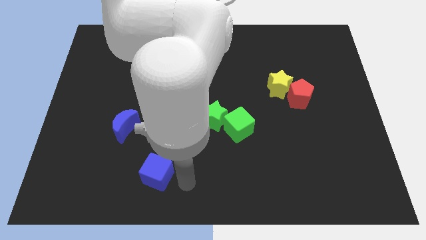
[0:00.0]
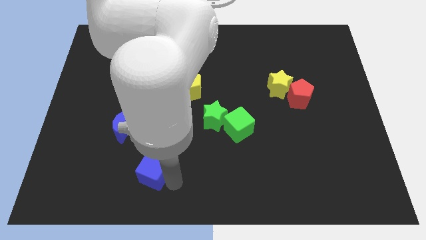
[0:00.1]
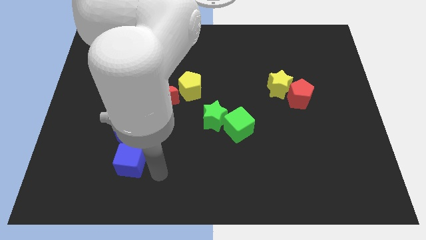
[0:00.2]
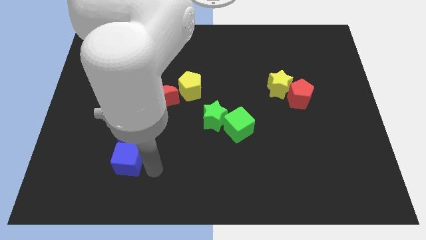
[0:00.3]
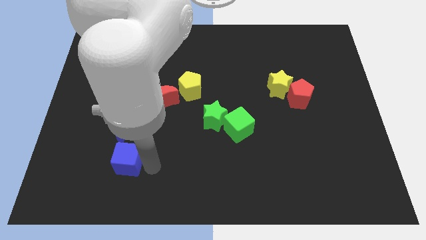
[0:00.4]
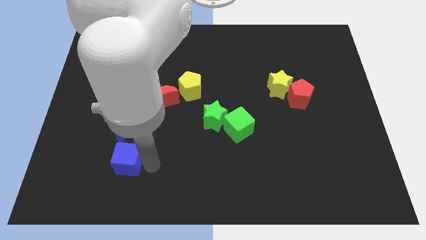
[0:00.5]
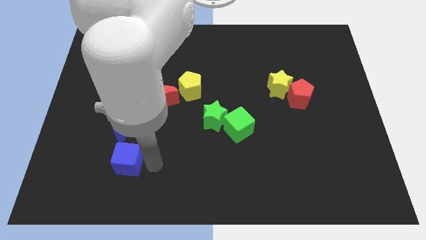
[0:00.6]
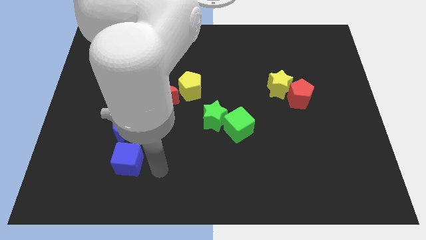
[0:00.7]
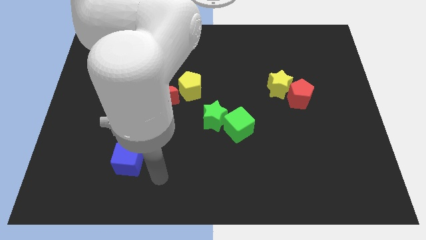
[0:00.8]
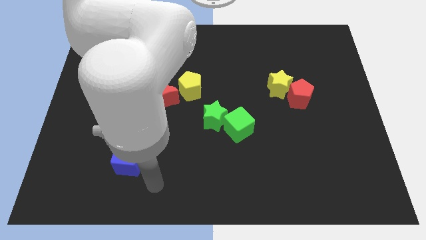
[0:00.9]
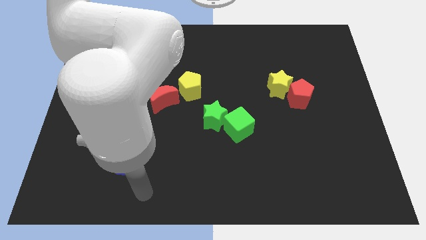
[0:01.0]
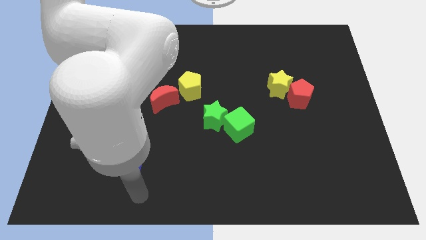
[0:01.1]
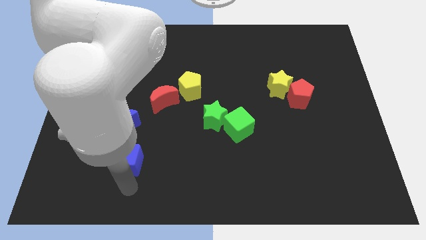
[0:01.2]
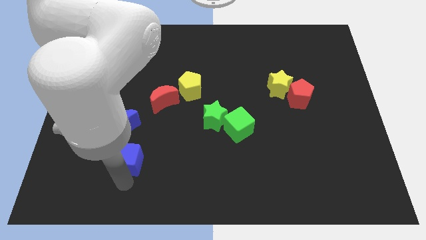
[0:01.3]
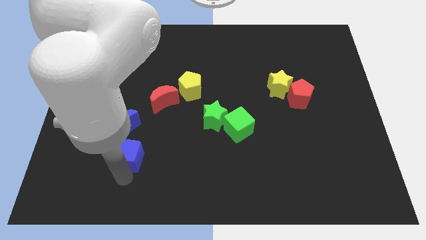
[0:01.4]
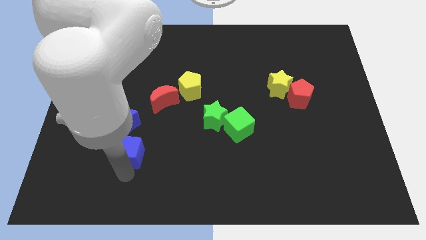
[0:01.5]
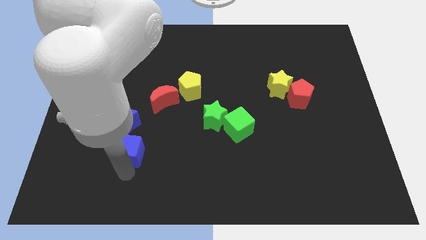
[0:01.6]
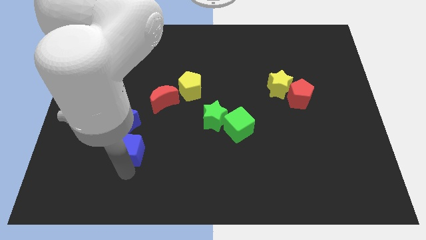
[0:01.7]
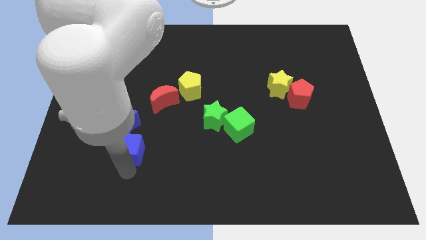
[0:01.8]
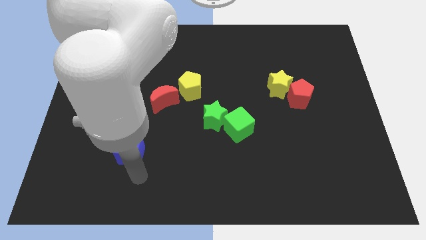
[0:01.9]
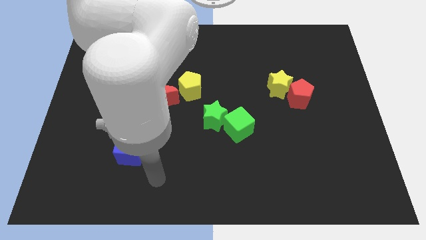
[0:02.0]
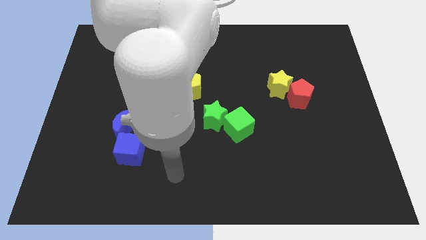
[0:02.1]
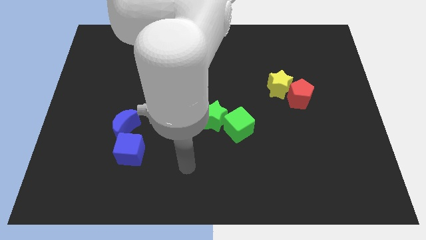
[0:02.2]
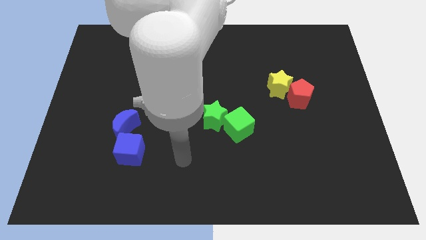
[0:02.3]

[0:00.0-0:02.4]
move the blue cube to the bottom of the blue crescent

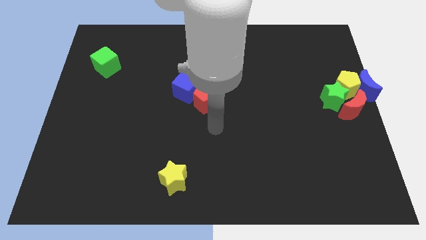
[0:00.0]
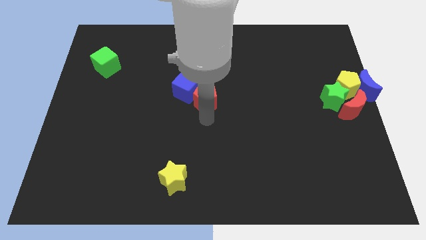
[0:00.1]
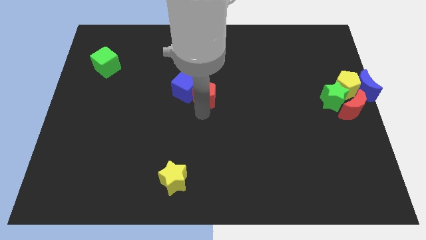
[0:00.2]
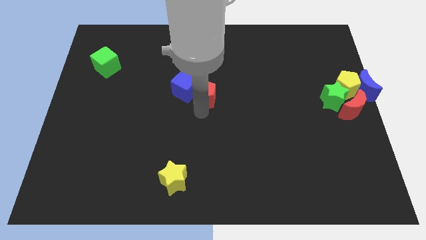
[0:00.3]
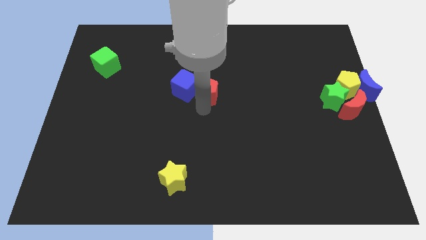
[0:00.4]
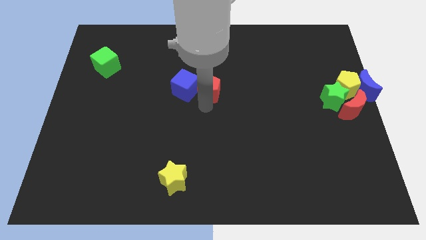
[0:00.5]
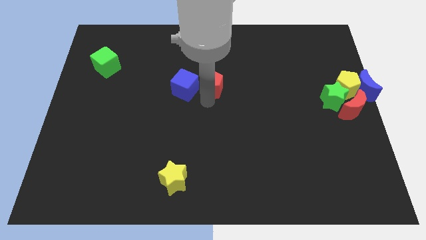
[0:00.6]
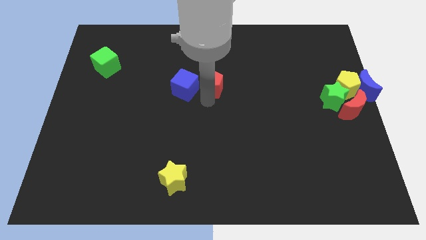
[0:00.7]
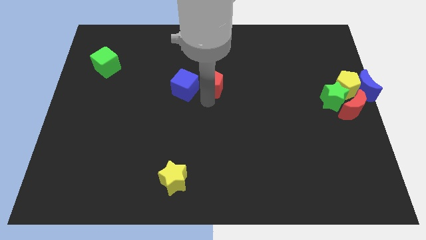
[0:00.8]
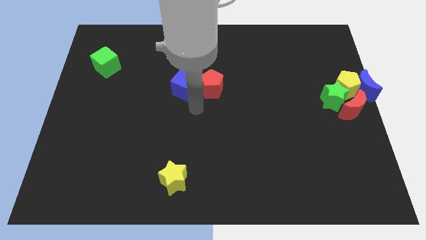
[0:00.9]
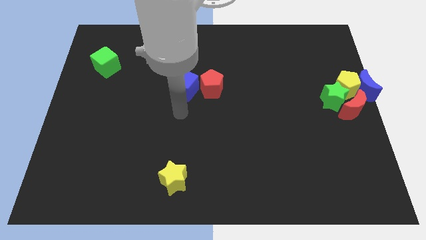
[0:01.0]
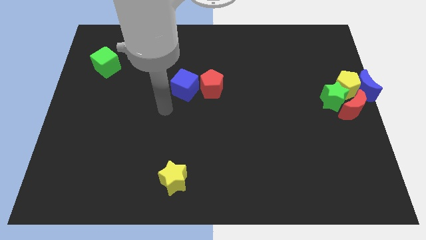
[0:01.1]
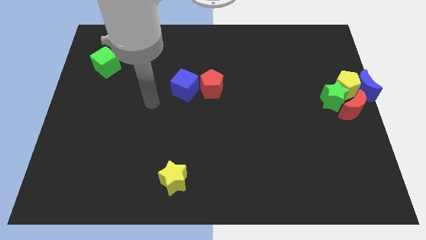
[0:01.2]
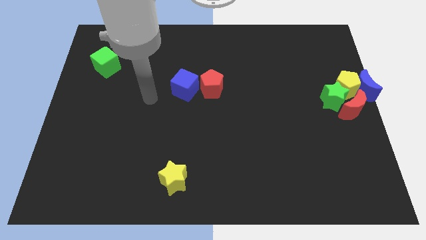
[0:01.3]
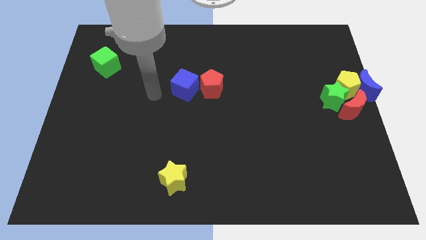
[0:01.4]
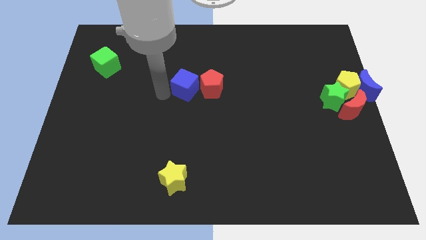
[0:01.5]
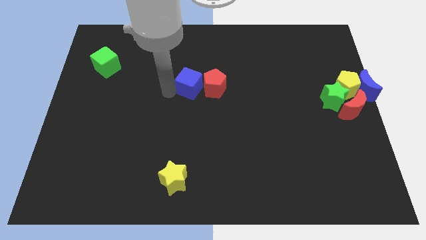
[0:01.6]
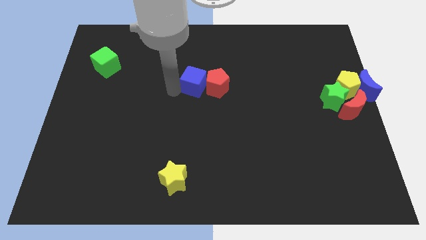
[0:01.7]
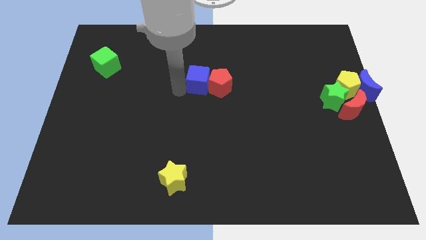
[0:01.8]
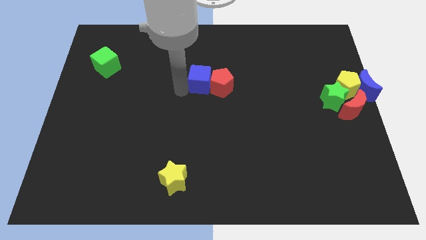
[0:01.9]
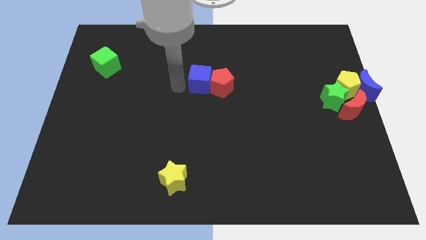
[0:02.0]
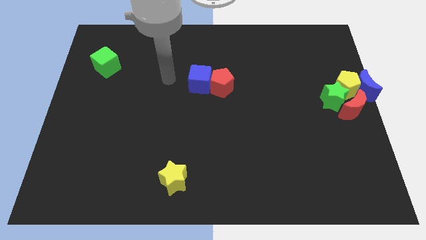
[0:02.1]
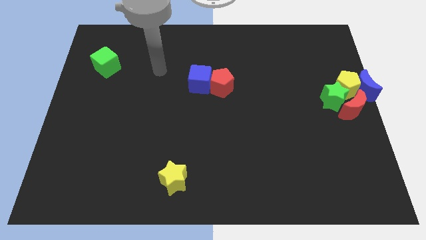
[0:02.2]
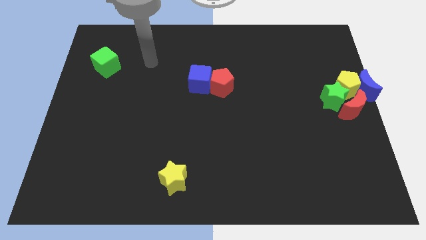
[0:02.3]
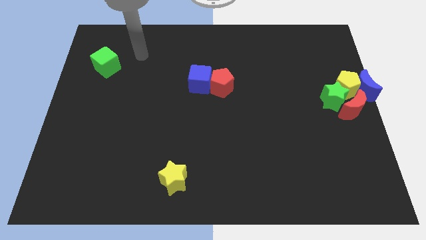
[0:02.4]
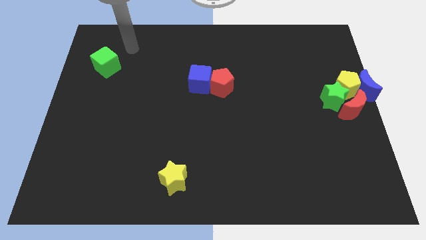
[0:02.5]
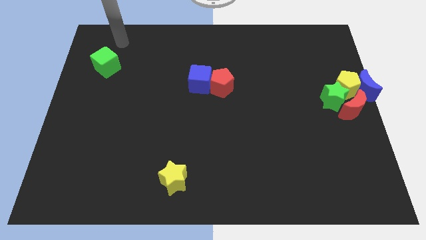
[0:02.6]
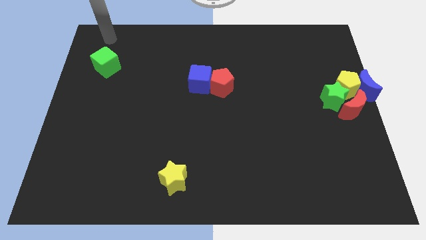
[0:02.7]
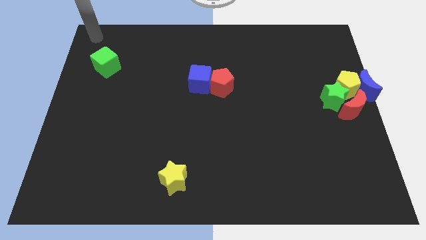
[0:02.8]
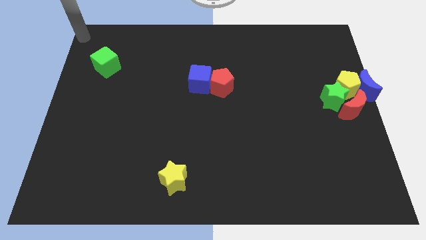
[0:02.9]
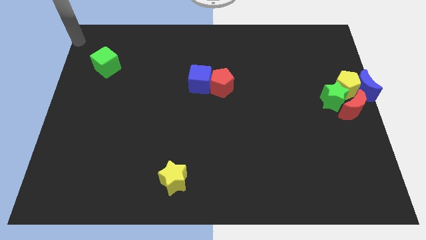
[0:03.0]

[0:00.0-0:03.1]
slightly push the red pentagon and blue cube towards the center of the board

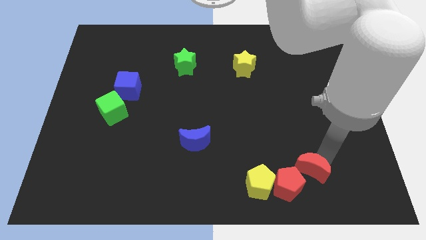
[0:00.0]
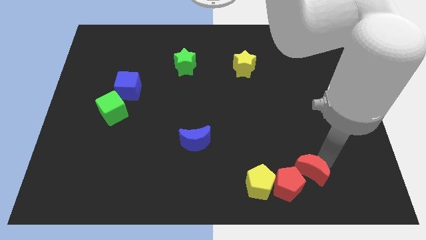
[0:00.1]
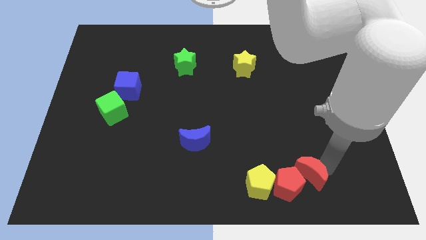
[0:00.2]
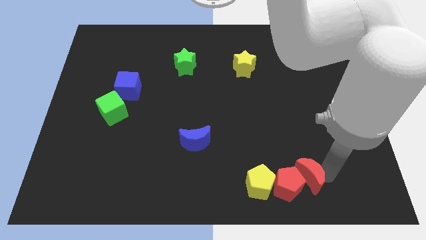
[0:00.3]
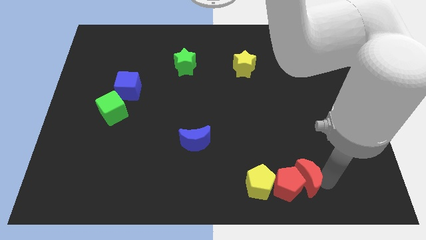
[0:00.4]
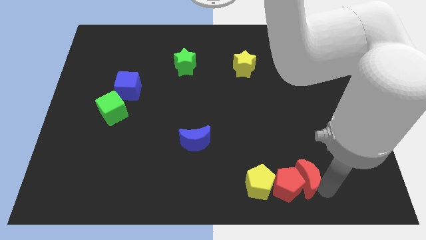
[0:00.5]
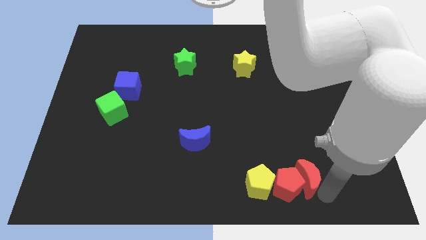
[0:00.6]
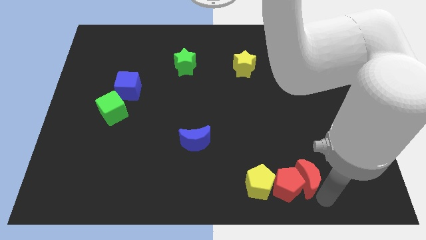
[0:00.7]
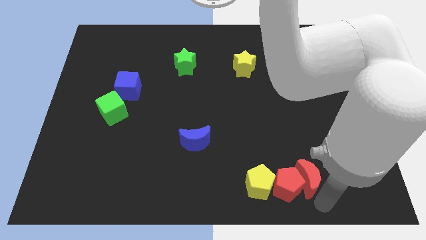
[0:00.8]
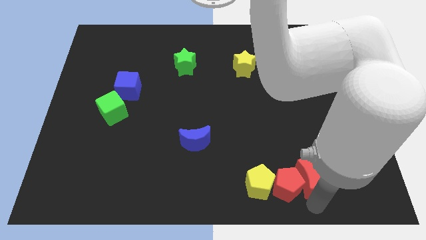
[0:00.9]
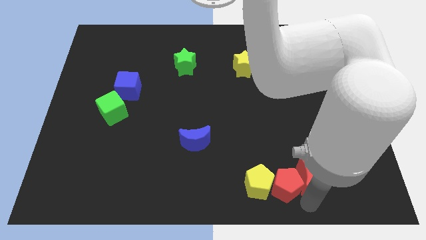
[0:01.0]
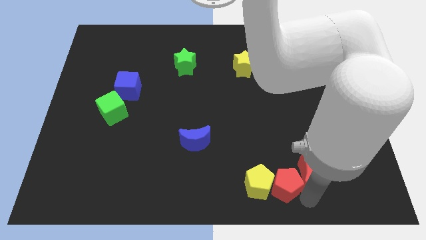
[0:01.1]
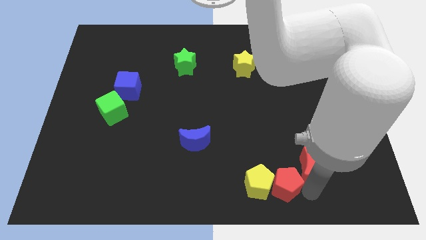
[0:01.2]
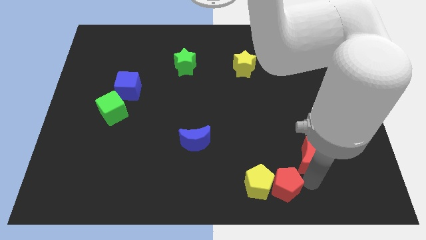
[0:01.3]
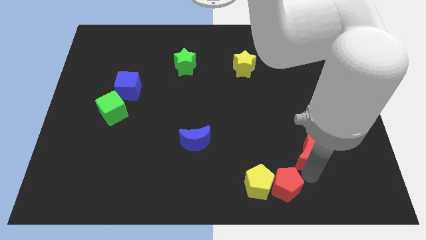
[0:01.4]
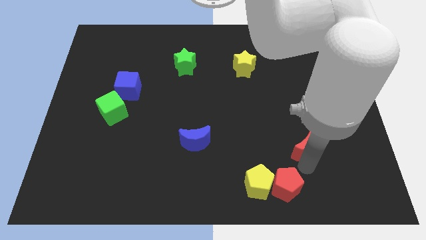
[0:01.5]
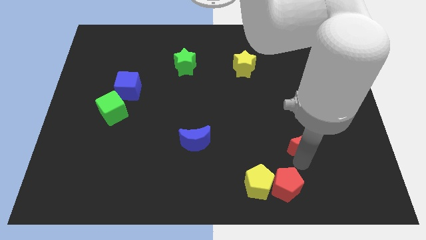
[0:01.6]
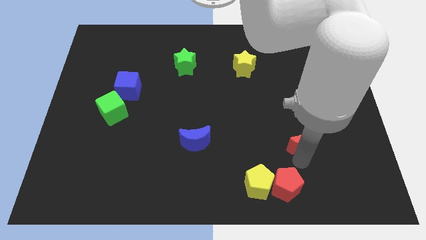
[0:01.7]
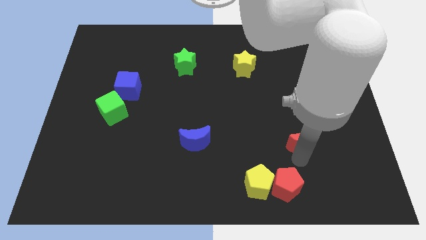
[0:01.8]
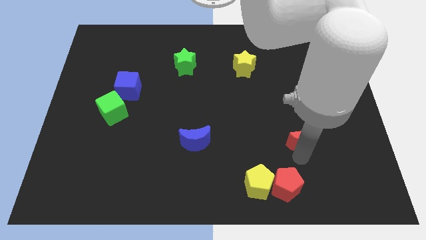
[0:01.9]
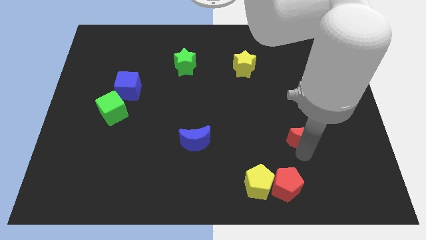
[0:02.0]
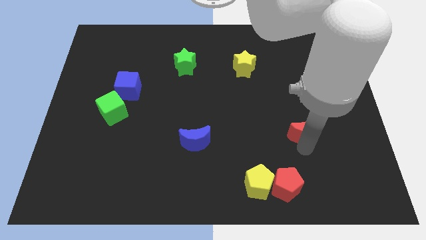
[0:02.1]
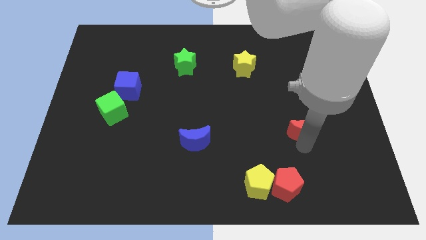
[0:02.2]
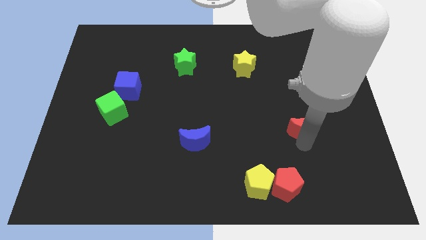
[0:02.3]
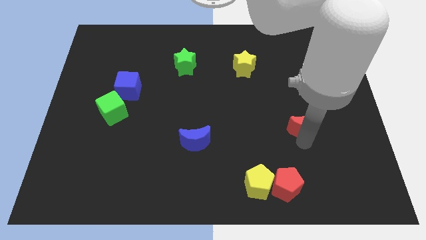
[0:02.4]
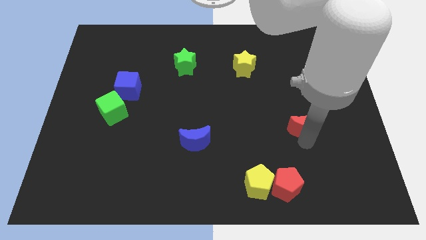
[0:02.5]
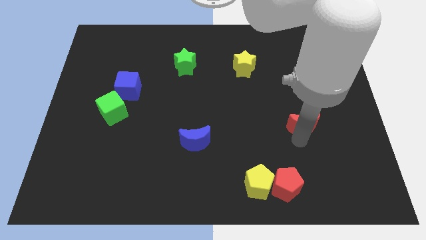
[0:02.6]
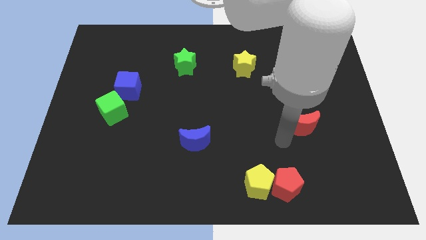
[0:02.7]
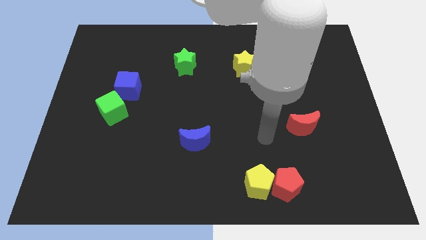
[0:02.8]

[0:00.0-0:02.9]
move the red crescent away from the red pentagon

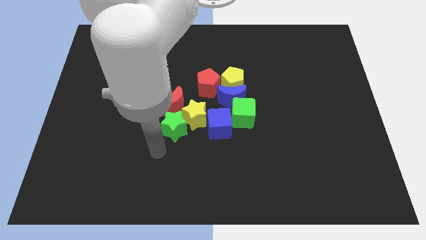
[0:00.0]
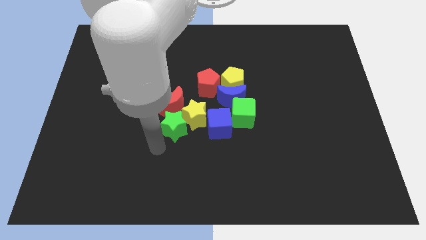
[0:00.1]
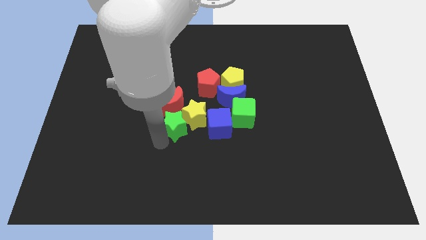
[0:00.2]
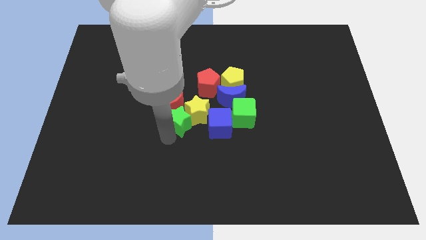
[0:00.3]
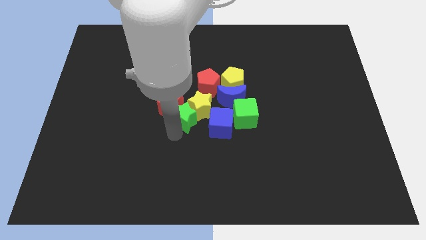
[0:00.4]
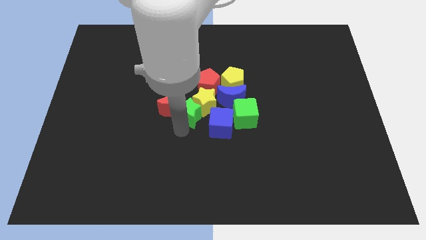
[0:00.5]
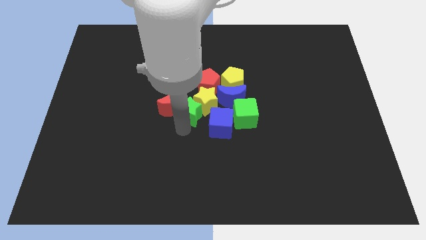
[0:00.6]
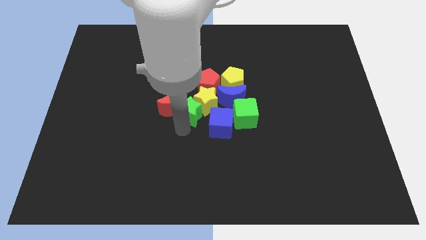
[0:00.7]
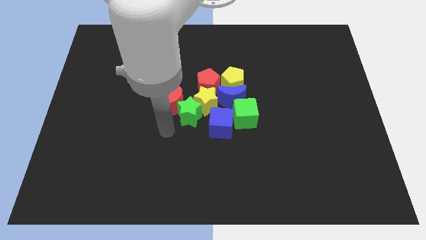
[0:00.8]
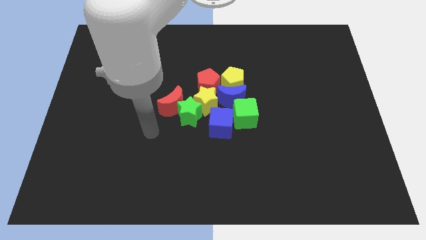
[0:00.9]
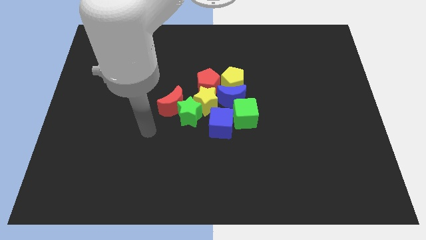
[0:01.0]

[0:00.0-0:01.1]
slide green and yellow stars towards center
